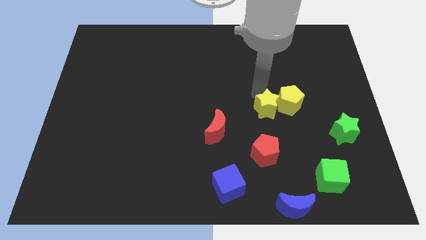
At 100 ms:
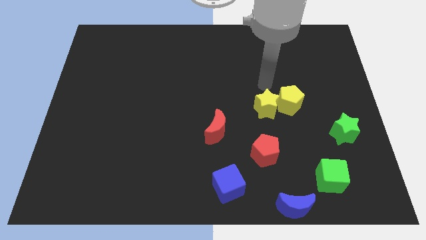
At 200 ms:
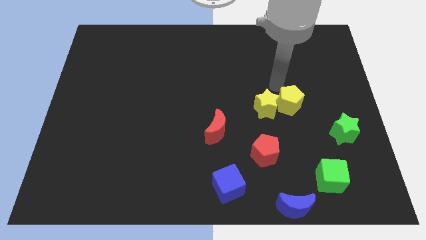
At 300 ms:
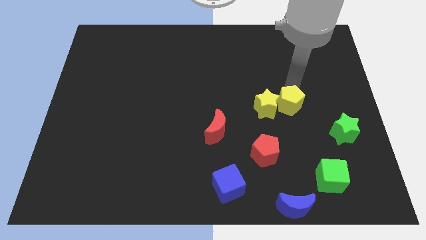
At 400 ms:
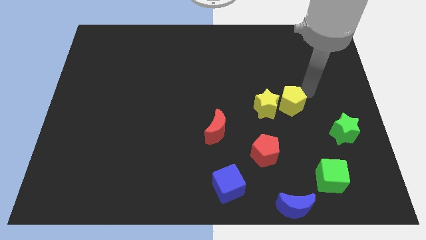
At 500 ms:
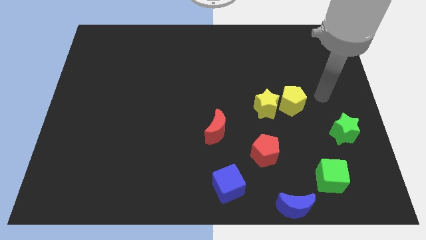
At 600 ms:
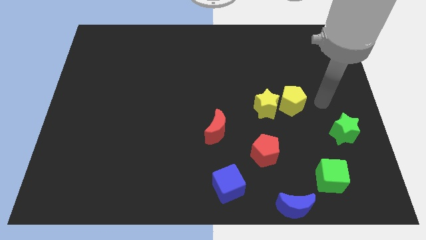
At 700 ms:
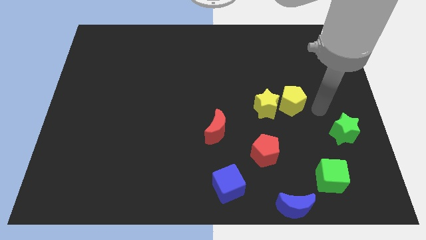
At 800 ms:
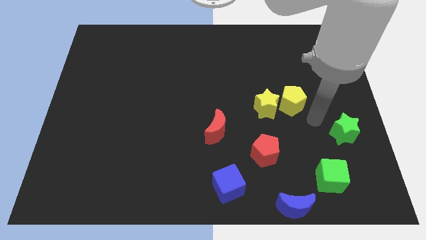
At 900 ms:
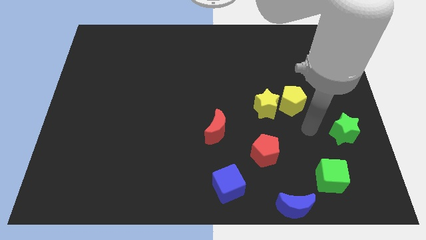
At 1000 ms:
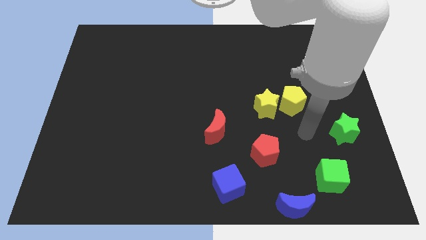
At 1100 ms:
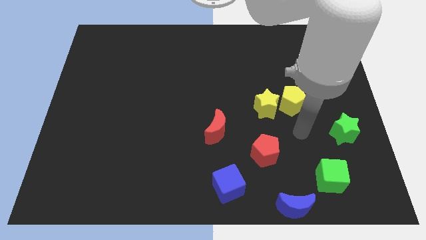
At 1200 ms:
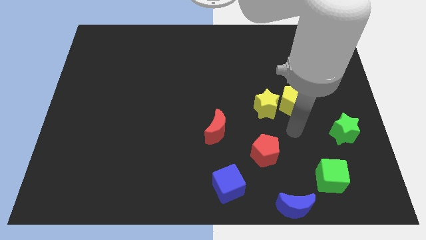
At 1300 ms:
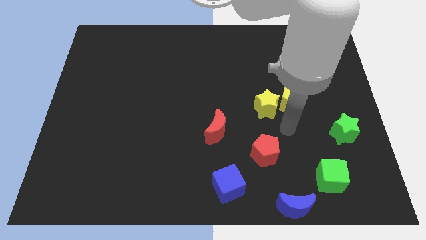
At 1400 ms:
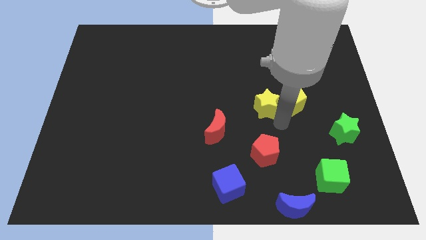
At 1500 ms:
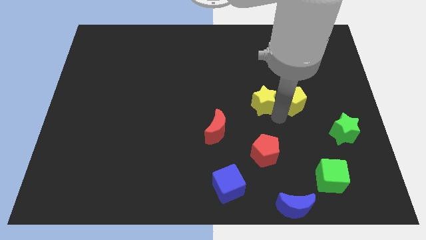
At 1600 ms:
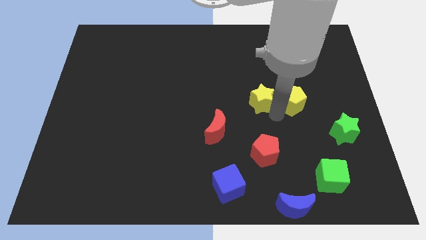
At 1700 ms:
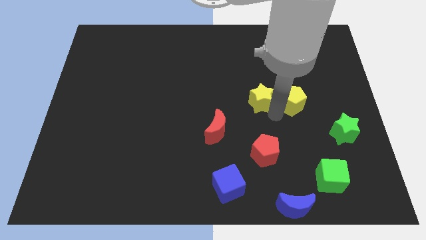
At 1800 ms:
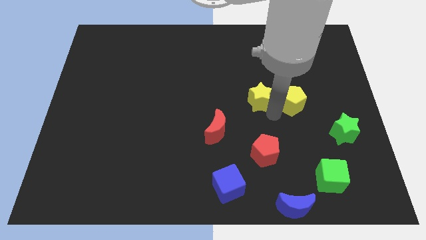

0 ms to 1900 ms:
push the yellow star towards up

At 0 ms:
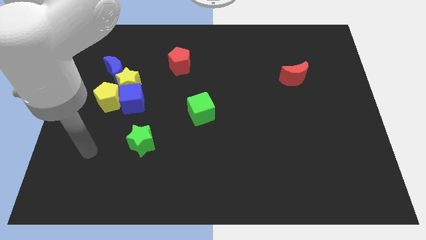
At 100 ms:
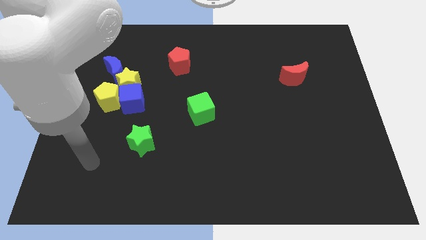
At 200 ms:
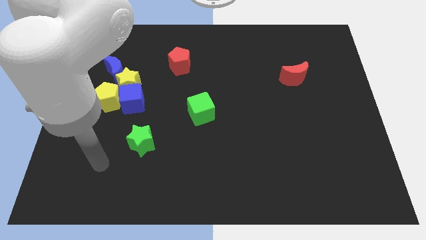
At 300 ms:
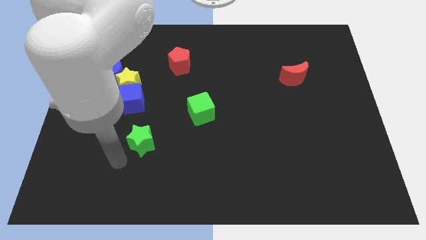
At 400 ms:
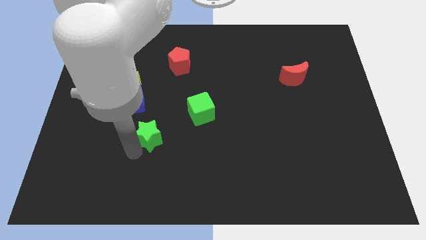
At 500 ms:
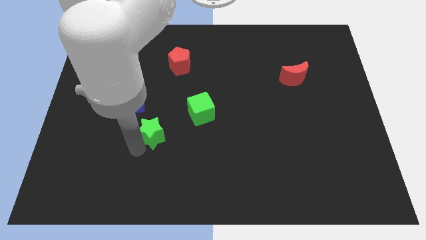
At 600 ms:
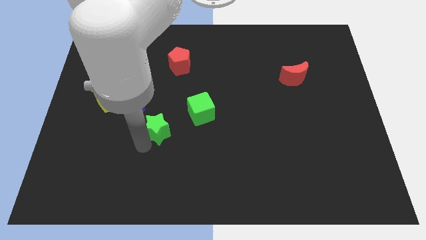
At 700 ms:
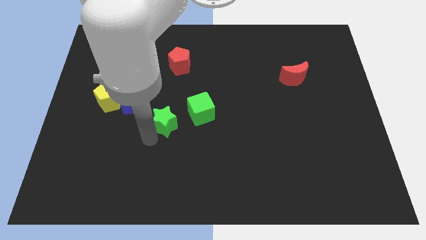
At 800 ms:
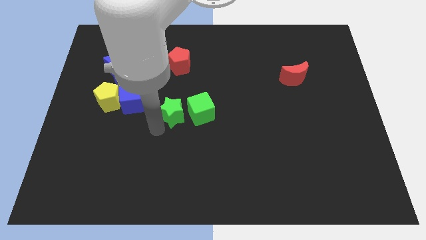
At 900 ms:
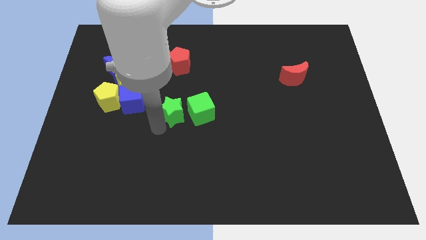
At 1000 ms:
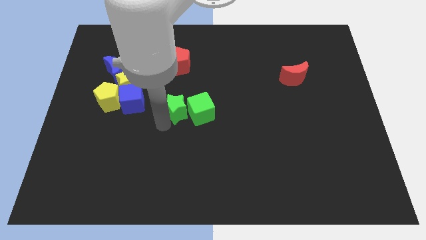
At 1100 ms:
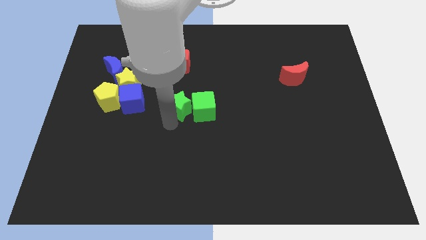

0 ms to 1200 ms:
place green star to the left of the green cube

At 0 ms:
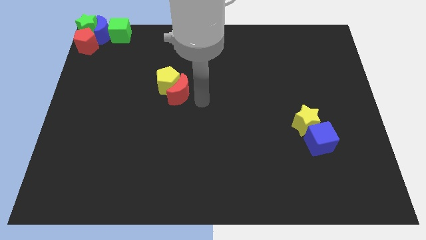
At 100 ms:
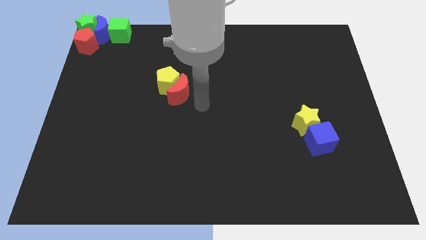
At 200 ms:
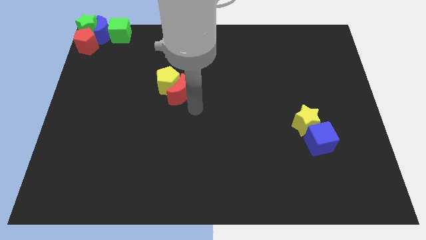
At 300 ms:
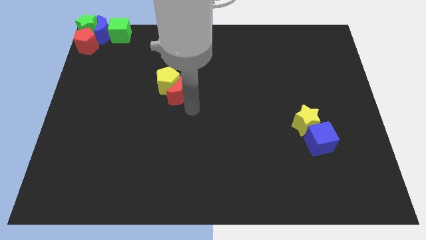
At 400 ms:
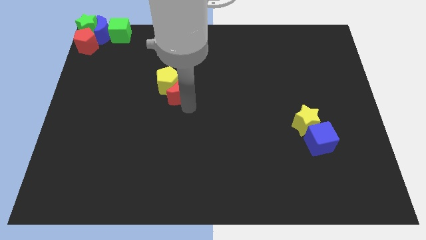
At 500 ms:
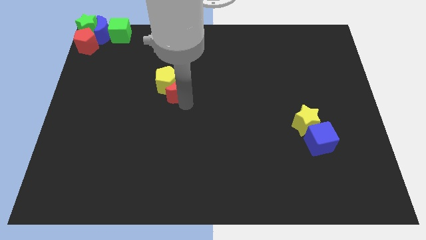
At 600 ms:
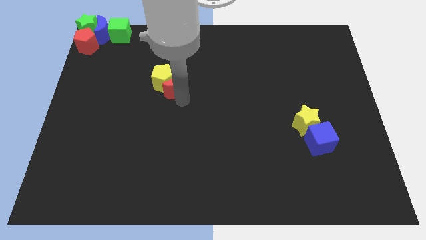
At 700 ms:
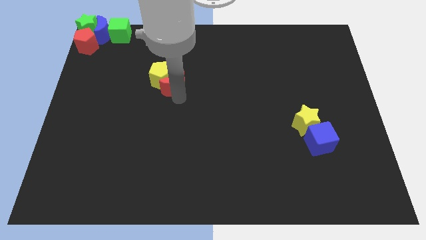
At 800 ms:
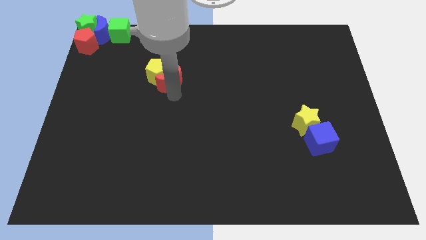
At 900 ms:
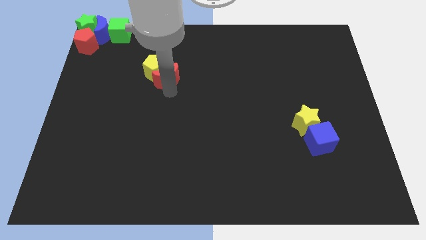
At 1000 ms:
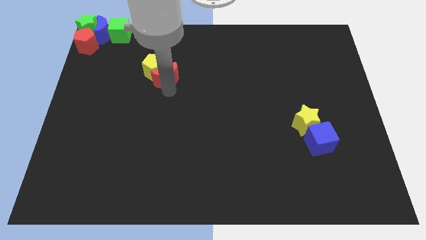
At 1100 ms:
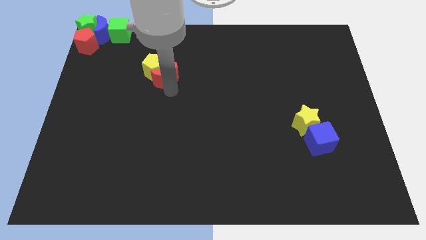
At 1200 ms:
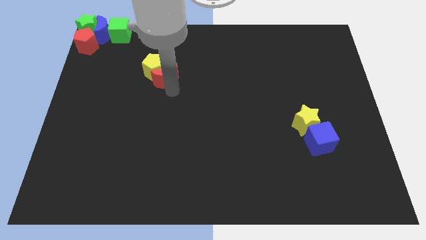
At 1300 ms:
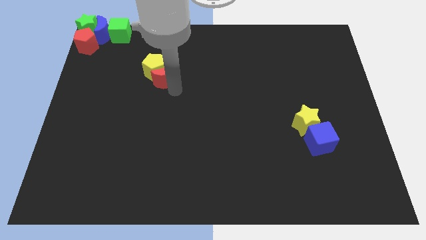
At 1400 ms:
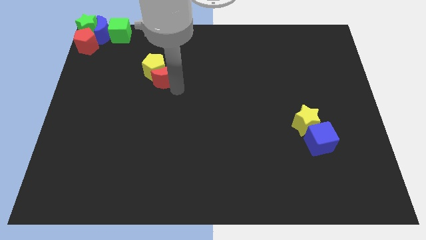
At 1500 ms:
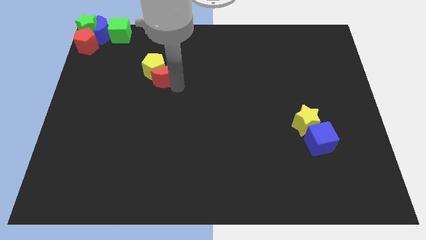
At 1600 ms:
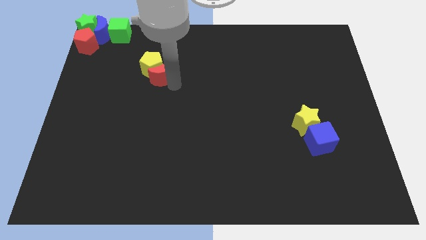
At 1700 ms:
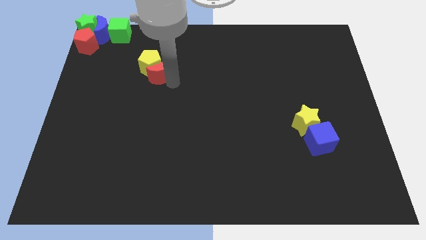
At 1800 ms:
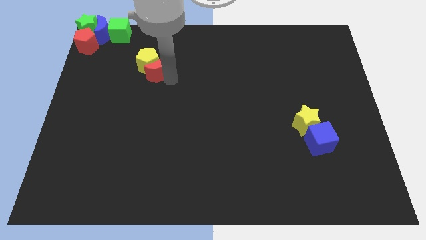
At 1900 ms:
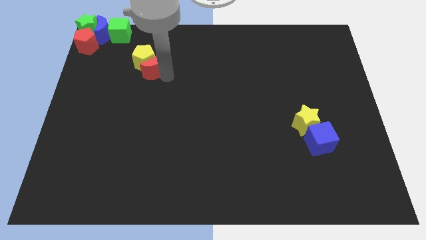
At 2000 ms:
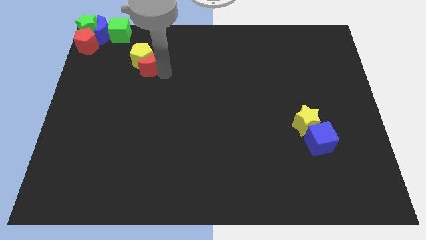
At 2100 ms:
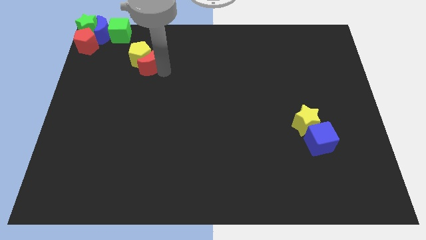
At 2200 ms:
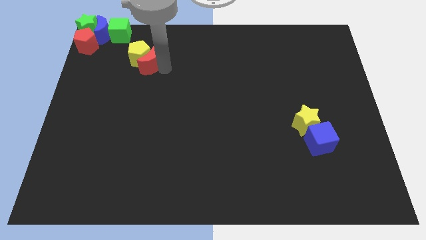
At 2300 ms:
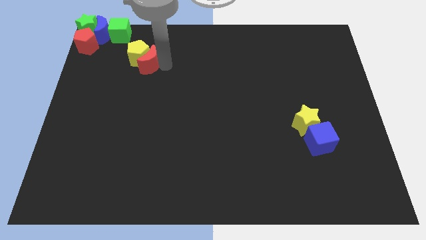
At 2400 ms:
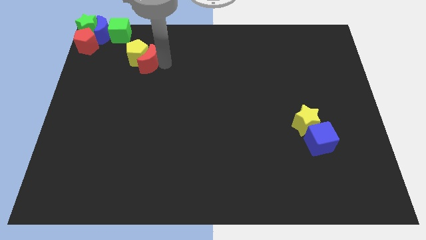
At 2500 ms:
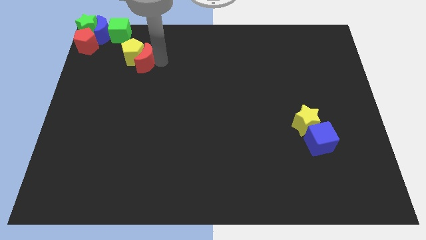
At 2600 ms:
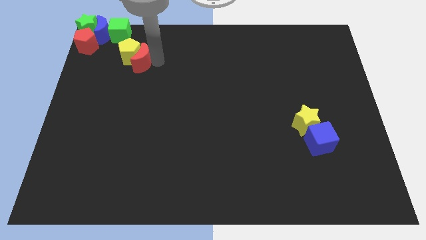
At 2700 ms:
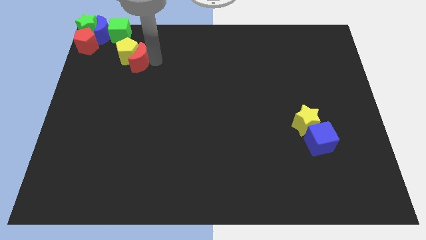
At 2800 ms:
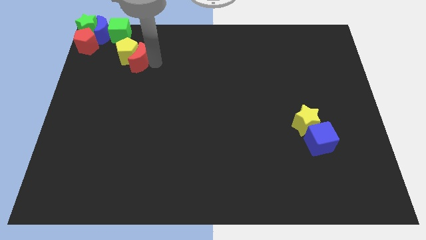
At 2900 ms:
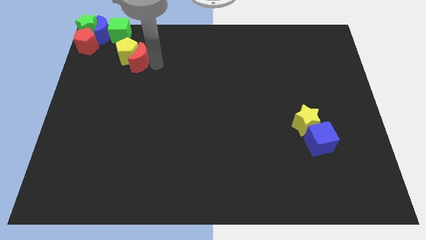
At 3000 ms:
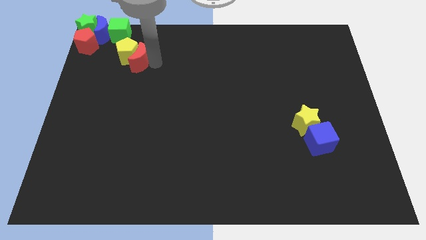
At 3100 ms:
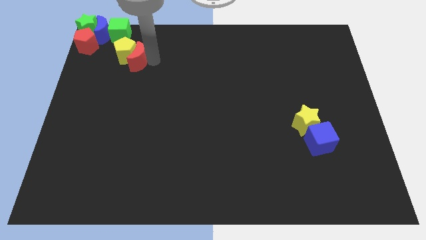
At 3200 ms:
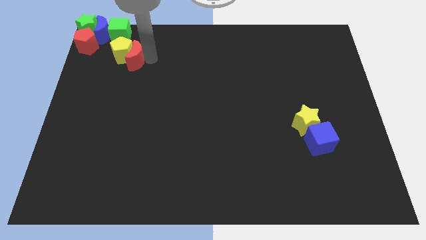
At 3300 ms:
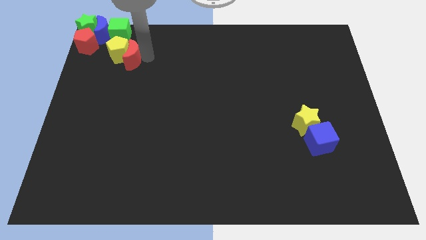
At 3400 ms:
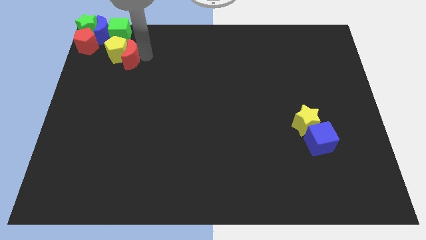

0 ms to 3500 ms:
place the yellow pentagon and red moon under the green cube

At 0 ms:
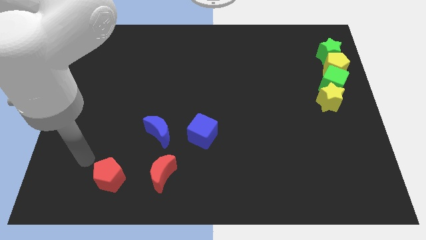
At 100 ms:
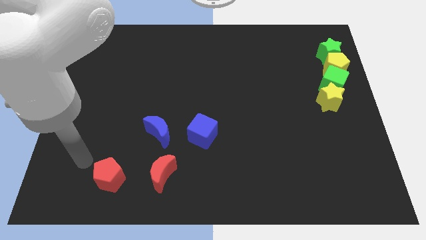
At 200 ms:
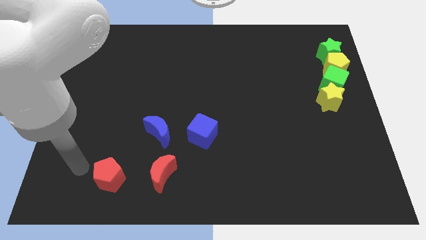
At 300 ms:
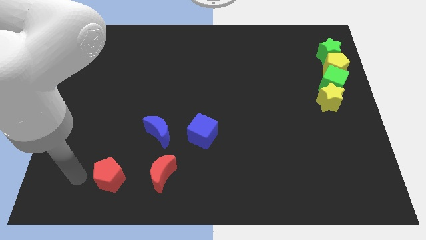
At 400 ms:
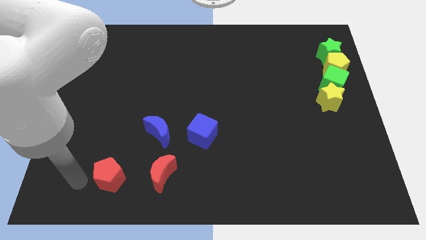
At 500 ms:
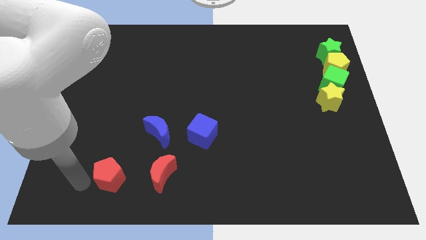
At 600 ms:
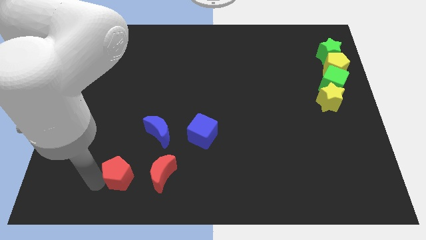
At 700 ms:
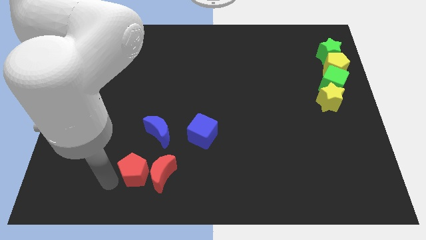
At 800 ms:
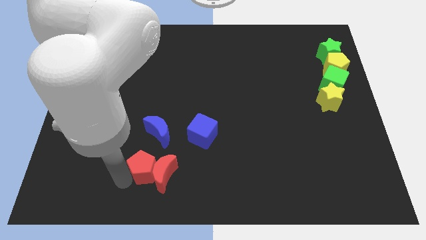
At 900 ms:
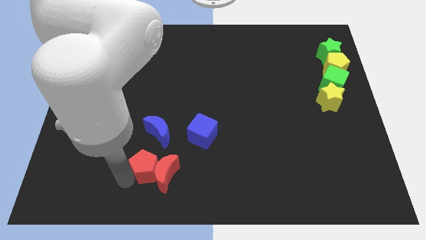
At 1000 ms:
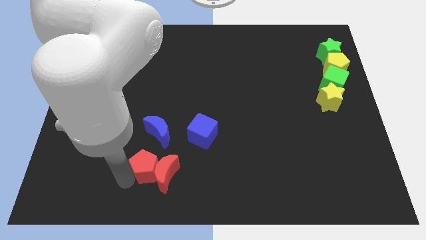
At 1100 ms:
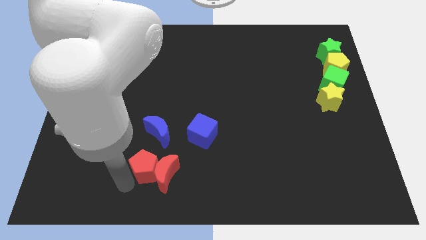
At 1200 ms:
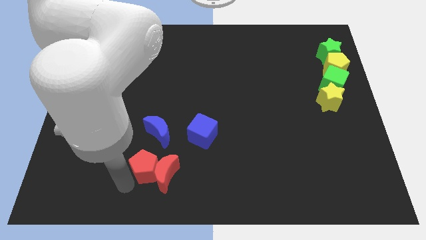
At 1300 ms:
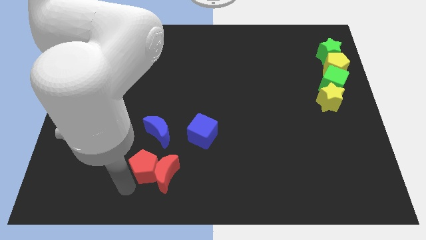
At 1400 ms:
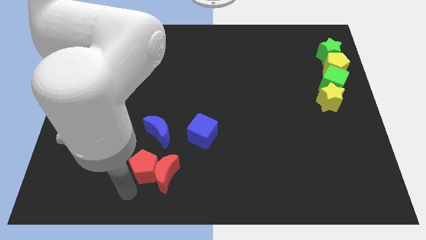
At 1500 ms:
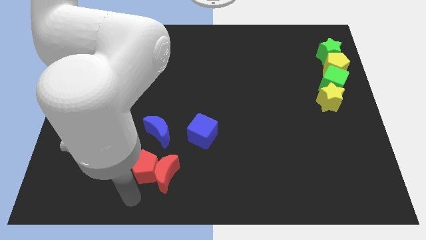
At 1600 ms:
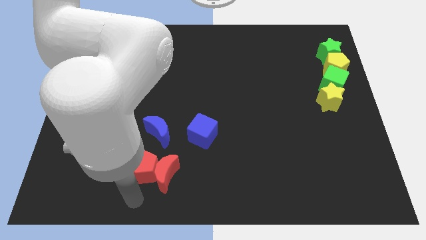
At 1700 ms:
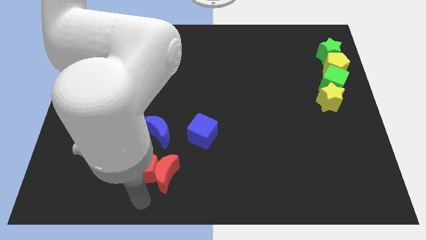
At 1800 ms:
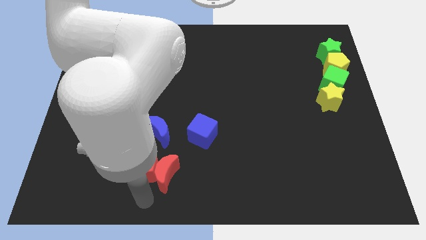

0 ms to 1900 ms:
move the red pentagon towards the red crescent

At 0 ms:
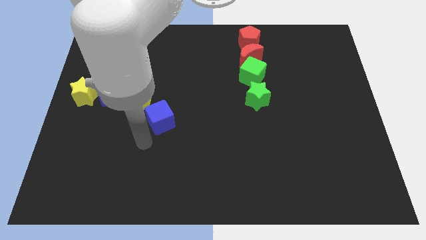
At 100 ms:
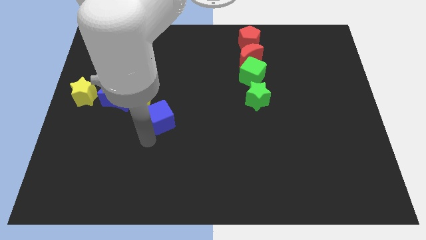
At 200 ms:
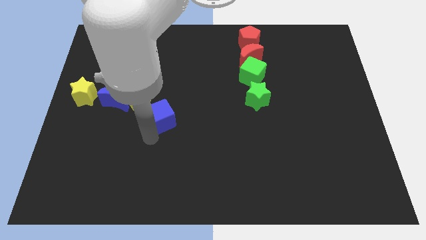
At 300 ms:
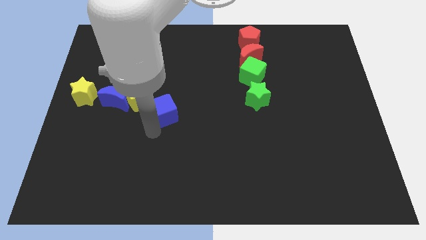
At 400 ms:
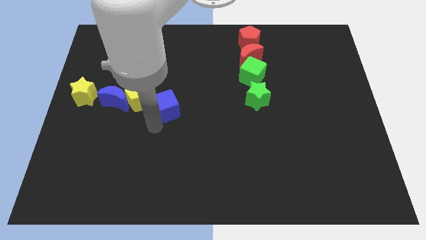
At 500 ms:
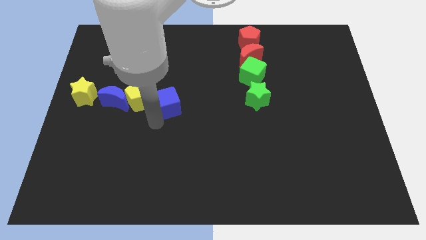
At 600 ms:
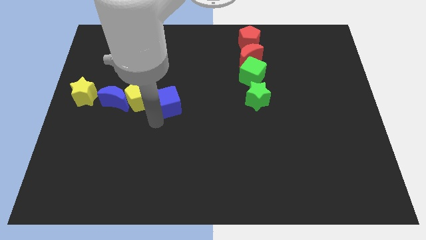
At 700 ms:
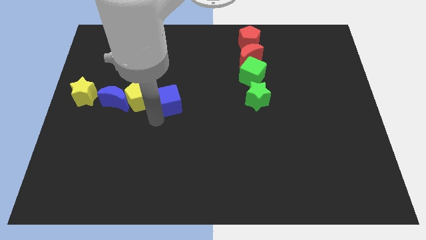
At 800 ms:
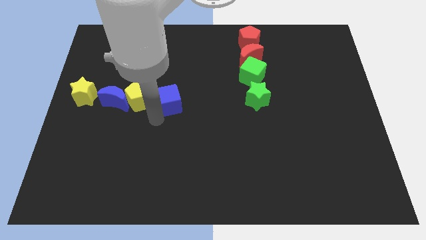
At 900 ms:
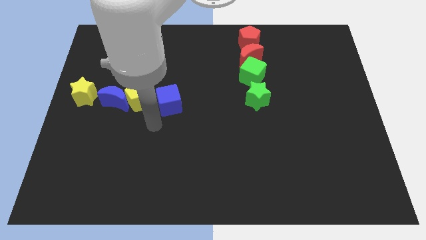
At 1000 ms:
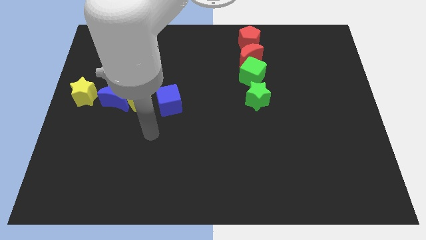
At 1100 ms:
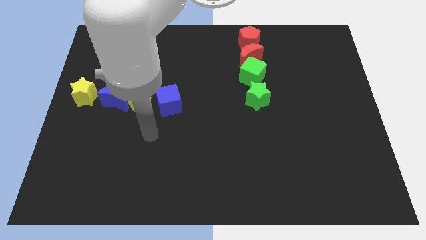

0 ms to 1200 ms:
adjust the blue cube to the right side of the yellow pentagon
